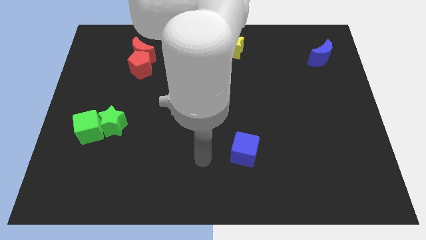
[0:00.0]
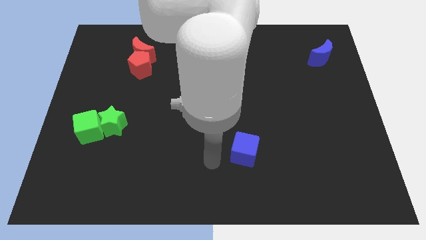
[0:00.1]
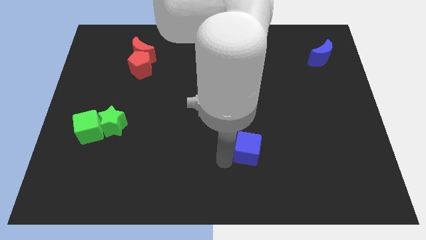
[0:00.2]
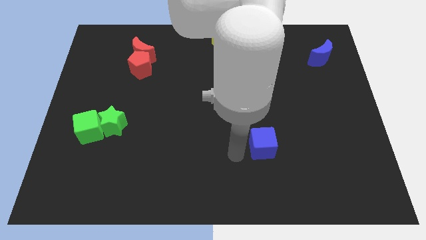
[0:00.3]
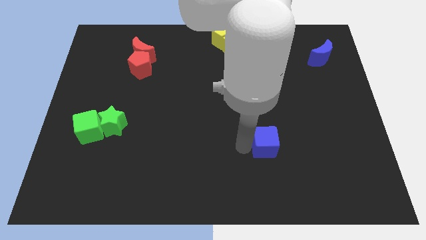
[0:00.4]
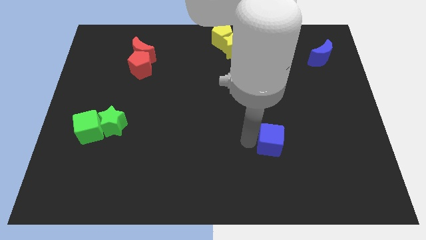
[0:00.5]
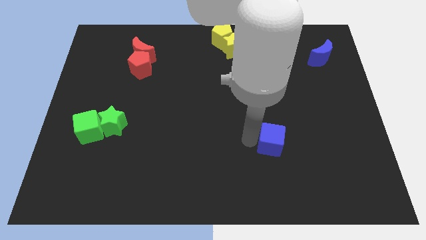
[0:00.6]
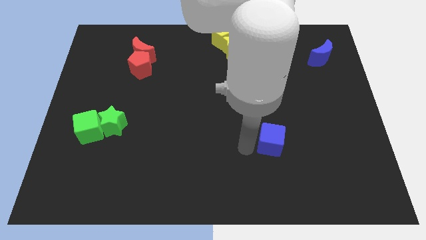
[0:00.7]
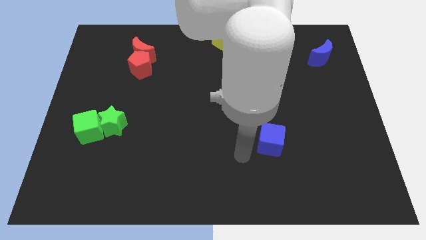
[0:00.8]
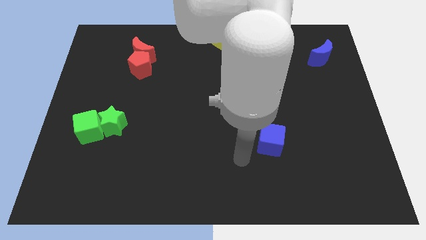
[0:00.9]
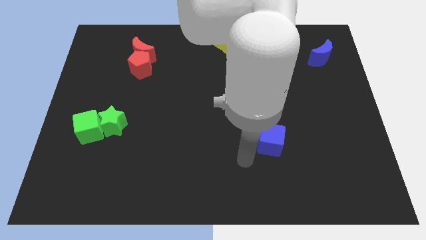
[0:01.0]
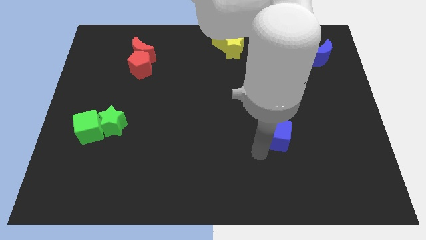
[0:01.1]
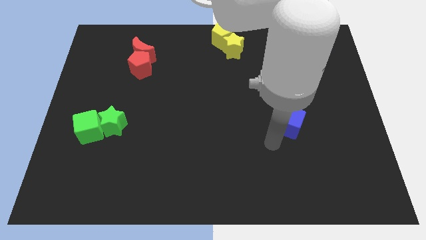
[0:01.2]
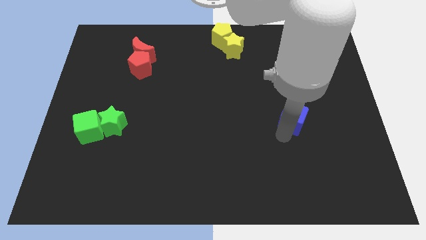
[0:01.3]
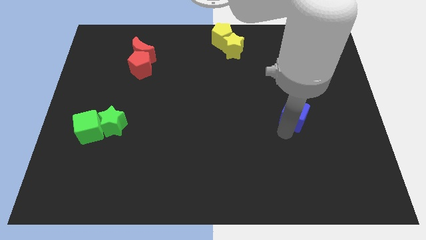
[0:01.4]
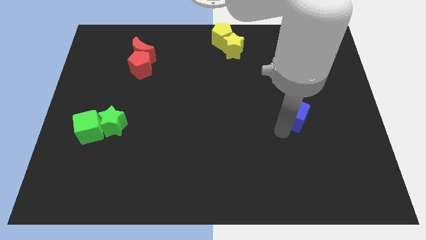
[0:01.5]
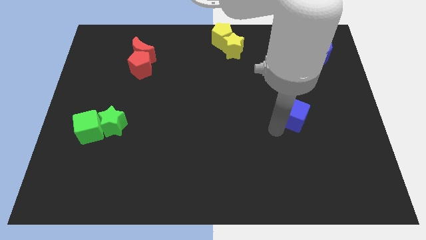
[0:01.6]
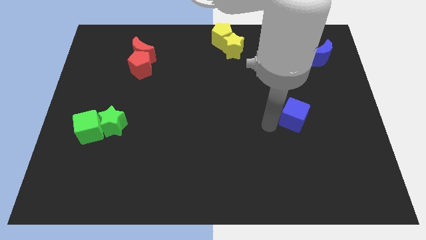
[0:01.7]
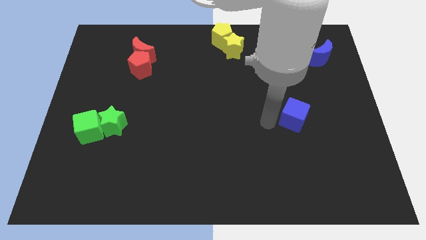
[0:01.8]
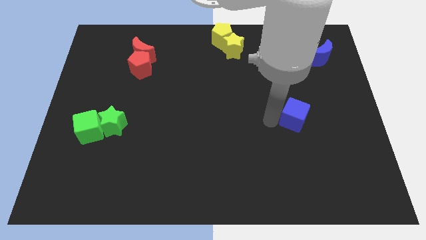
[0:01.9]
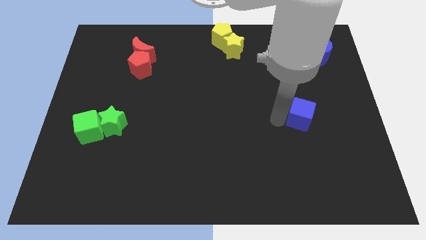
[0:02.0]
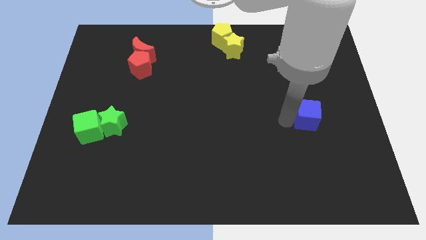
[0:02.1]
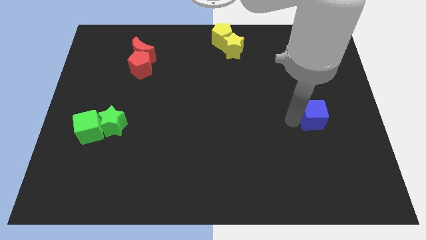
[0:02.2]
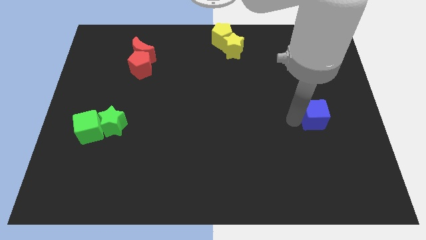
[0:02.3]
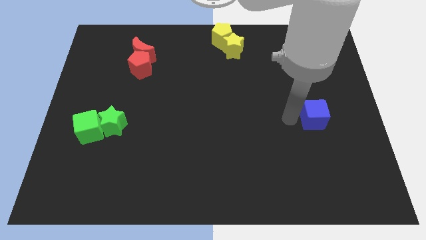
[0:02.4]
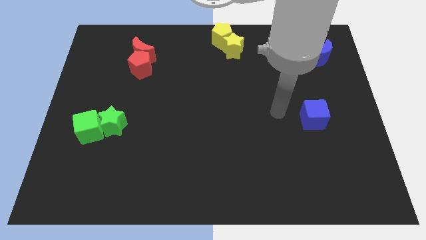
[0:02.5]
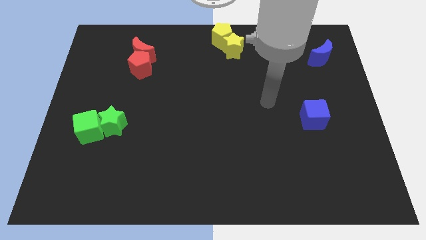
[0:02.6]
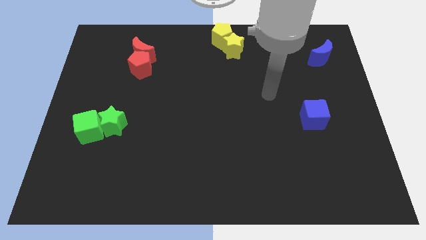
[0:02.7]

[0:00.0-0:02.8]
move the blue cube towards the center right of the board

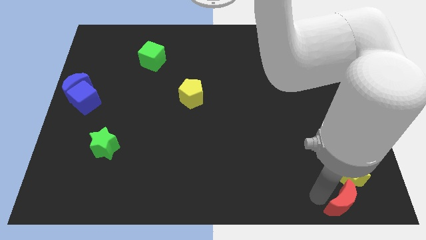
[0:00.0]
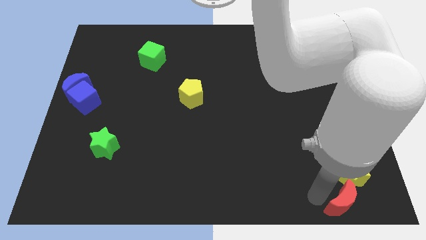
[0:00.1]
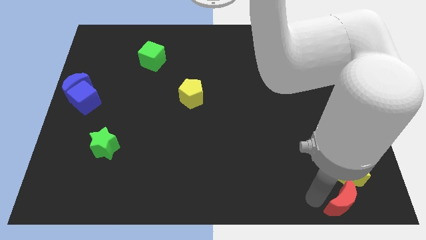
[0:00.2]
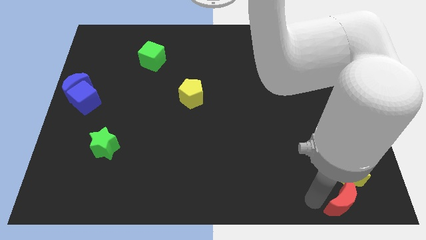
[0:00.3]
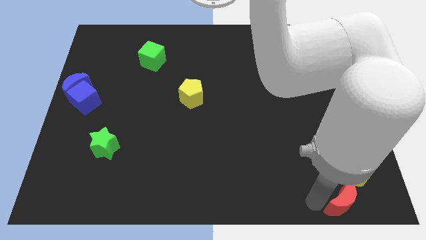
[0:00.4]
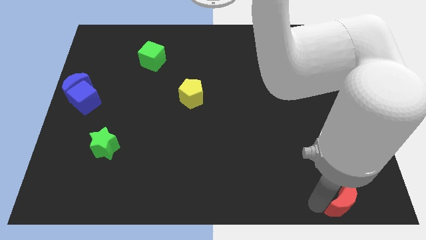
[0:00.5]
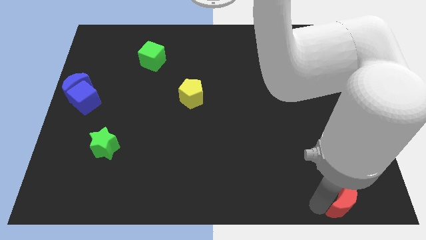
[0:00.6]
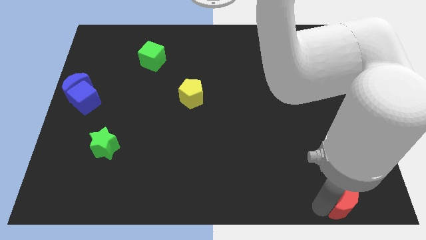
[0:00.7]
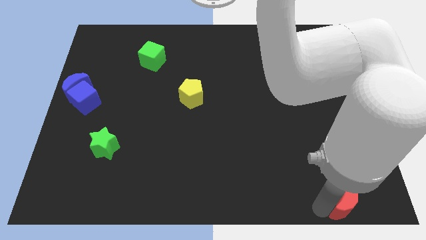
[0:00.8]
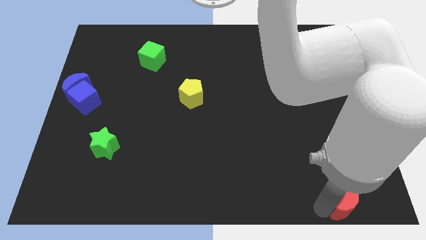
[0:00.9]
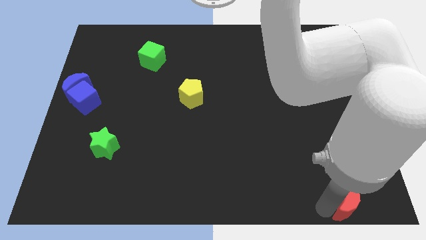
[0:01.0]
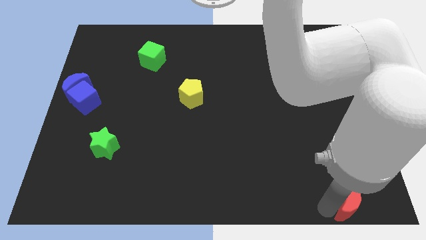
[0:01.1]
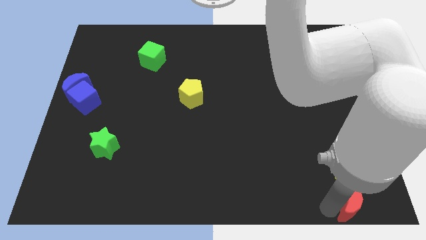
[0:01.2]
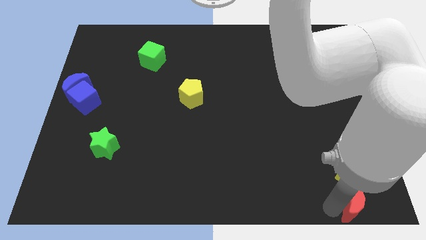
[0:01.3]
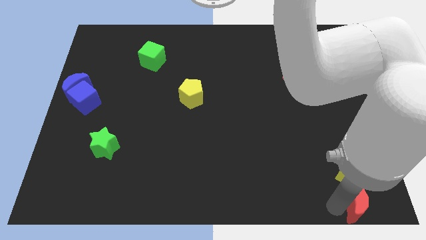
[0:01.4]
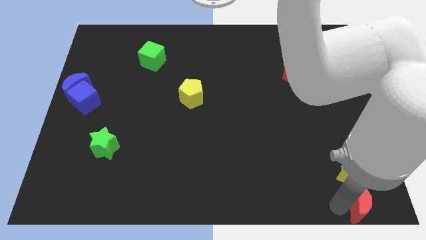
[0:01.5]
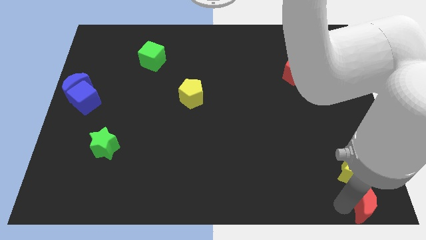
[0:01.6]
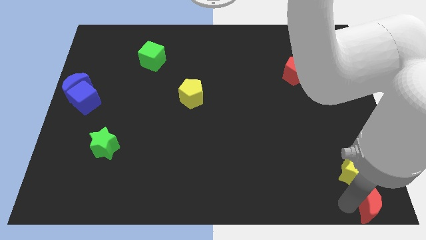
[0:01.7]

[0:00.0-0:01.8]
move the red moon to the bottom of yellow star

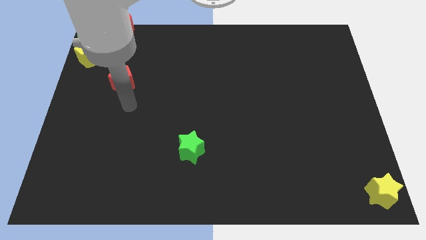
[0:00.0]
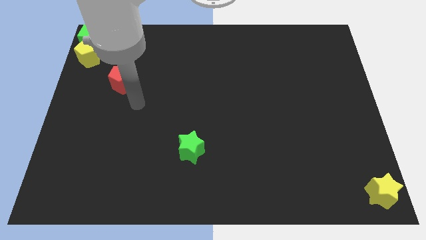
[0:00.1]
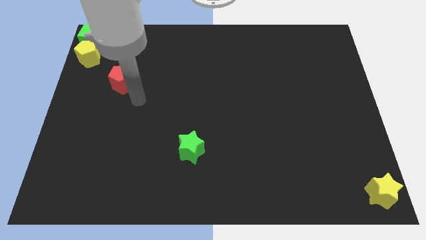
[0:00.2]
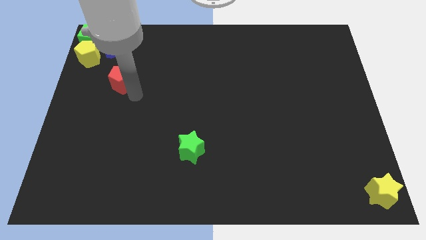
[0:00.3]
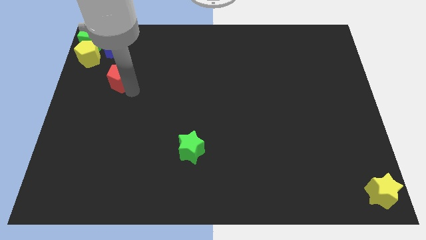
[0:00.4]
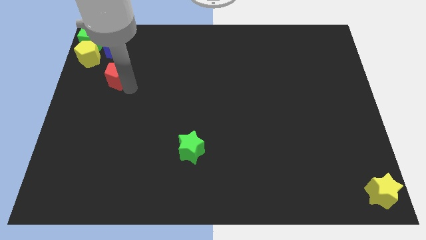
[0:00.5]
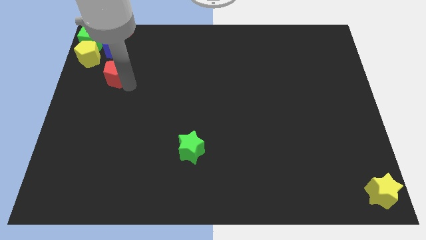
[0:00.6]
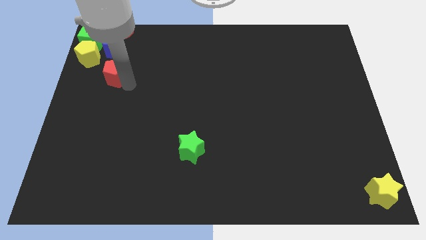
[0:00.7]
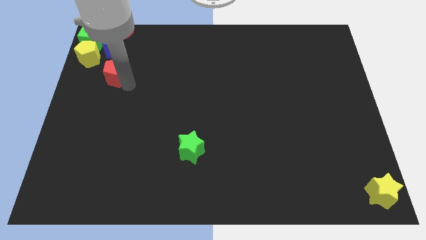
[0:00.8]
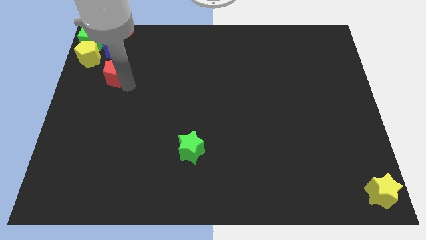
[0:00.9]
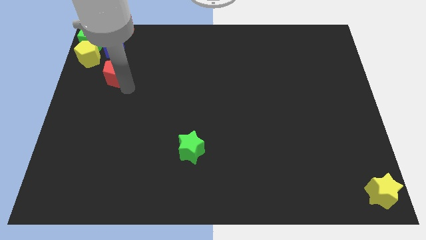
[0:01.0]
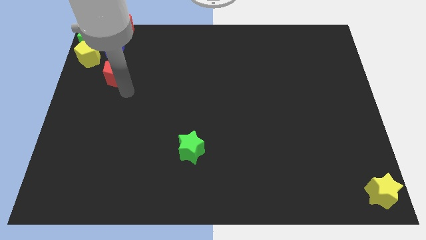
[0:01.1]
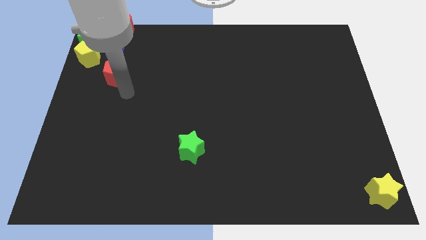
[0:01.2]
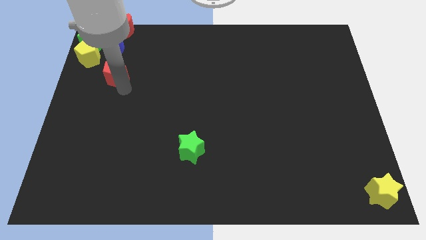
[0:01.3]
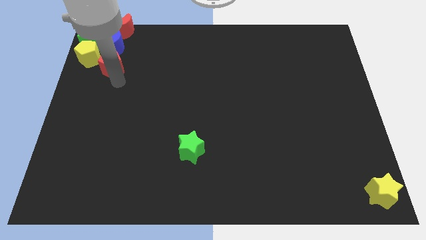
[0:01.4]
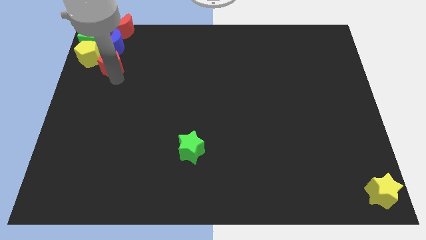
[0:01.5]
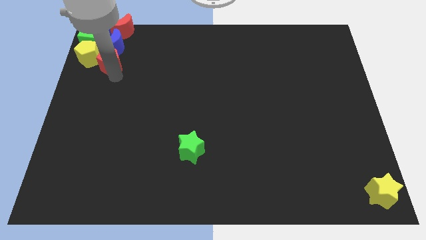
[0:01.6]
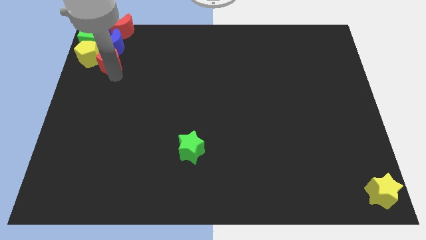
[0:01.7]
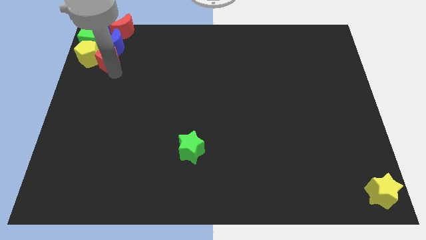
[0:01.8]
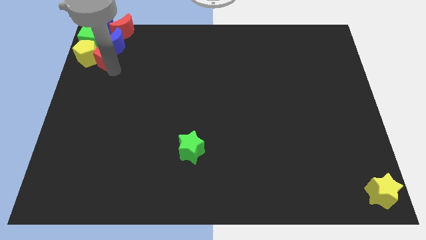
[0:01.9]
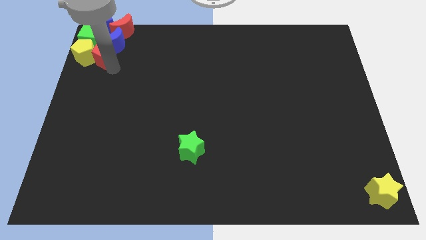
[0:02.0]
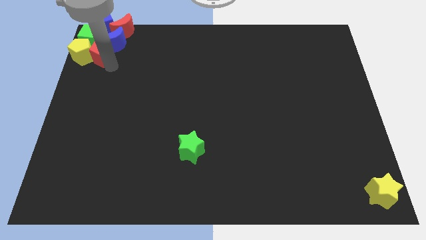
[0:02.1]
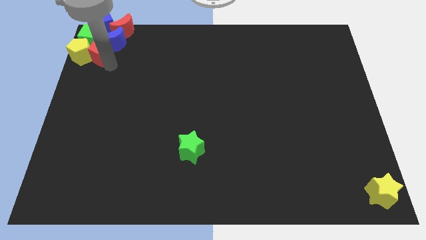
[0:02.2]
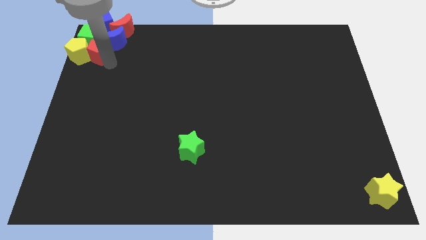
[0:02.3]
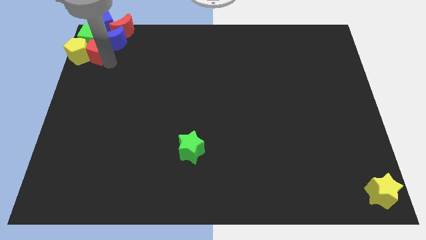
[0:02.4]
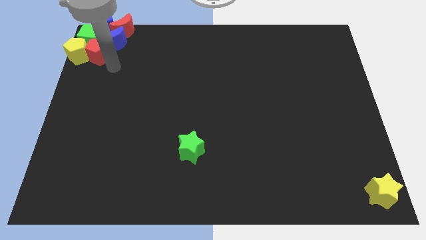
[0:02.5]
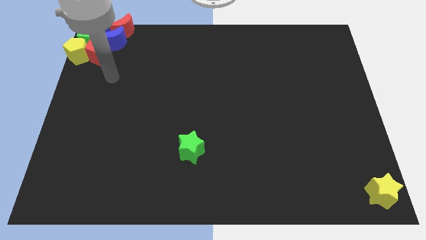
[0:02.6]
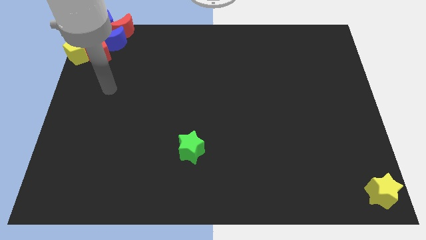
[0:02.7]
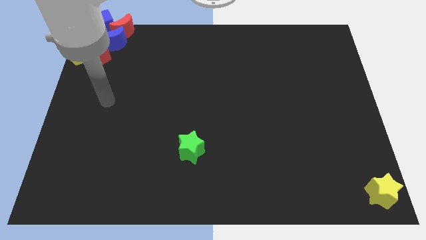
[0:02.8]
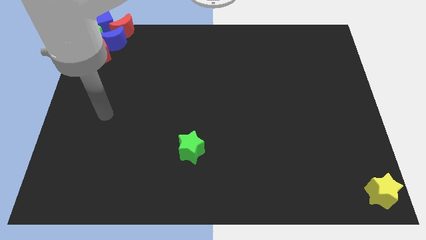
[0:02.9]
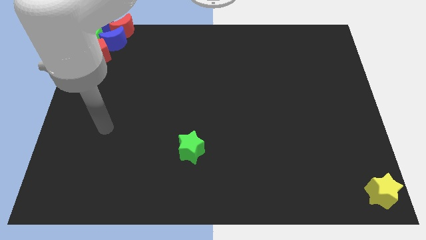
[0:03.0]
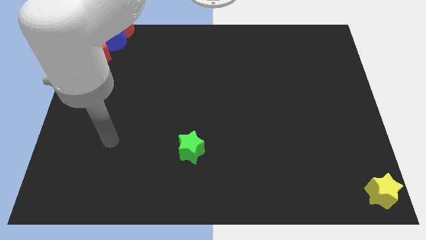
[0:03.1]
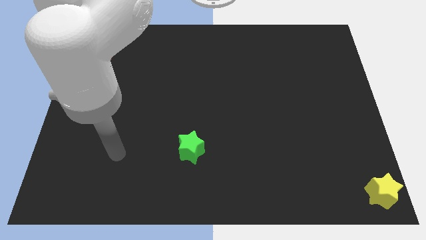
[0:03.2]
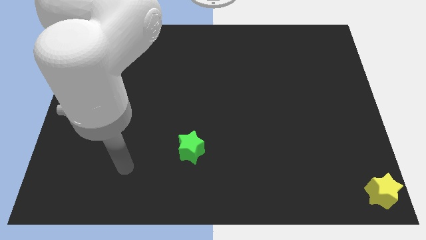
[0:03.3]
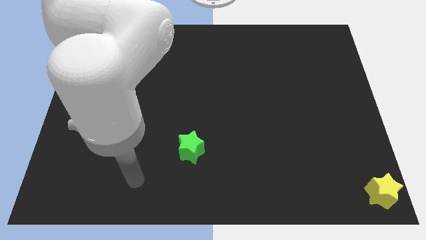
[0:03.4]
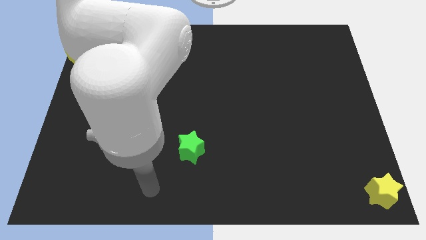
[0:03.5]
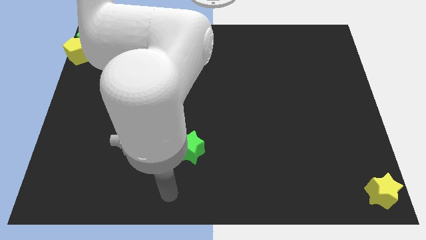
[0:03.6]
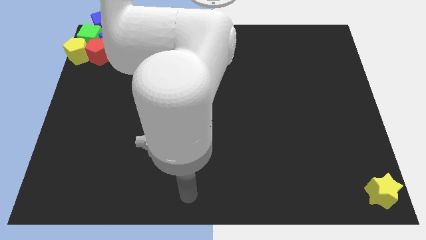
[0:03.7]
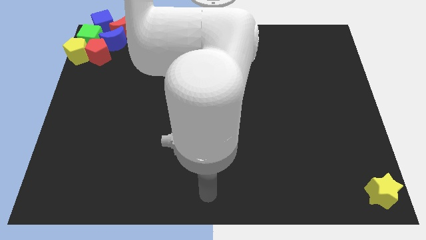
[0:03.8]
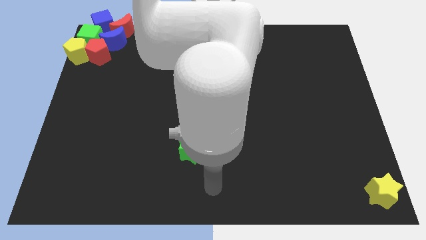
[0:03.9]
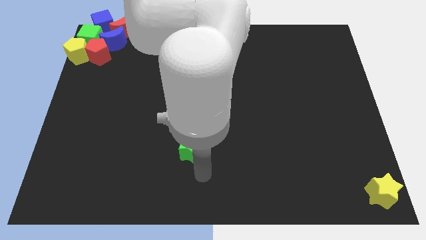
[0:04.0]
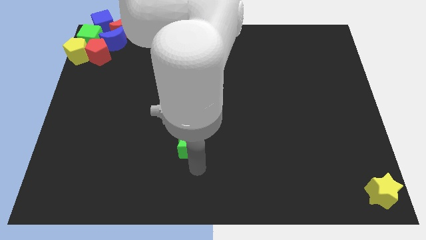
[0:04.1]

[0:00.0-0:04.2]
place the arm near the green star

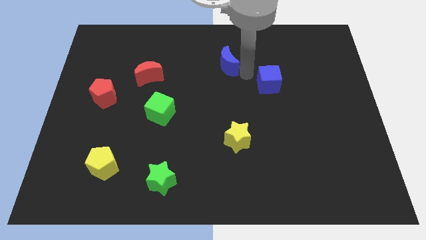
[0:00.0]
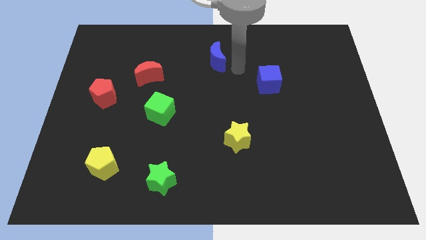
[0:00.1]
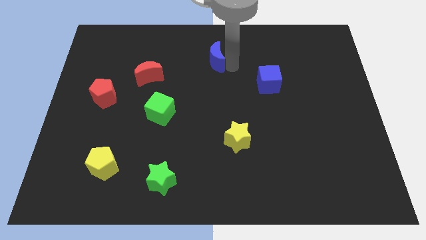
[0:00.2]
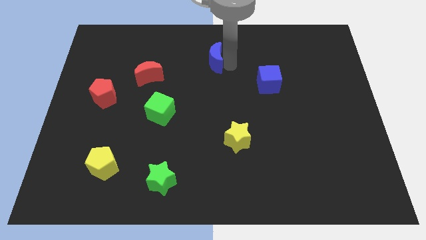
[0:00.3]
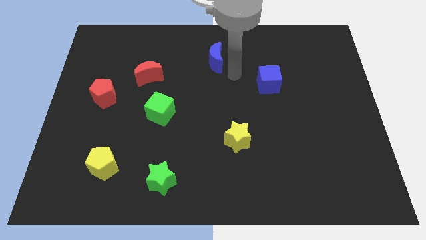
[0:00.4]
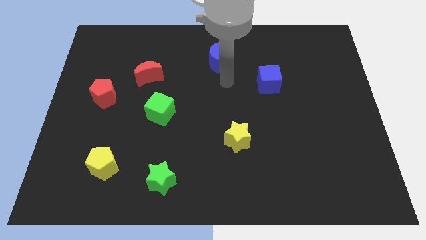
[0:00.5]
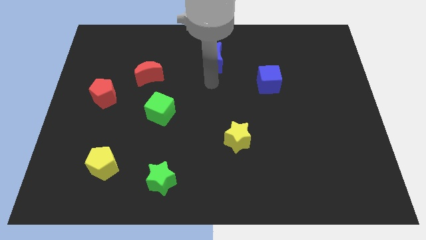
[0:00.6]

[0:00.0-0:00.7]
move the blue crescent away from the blue cube
